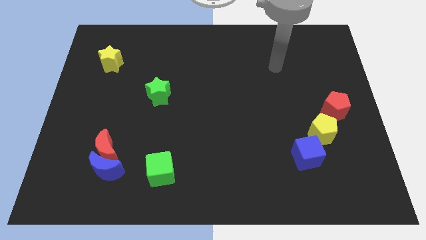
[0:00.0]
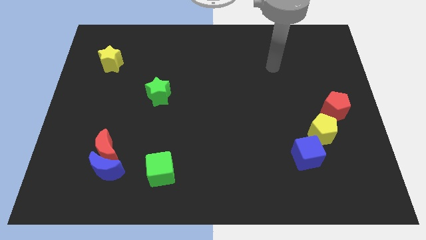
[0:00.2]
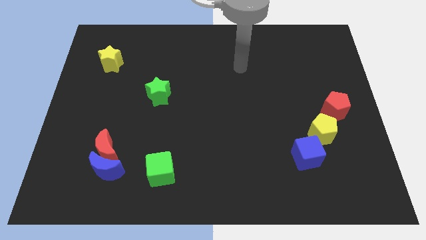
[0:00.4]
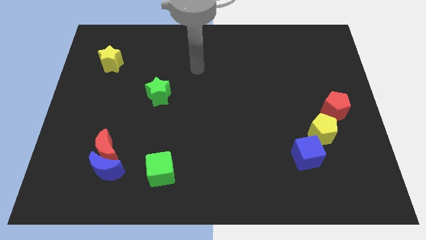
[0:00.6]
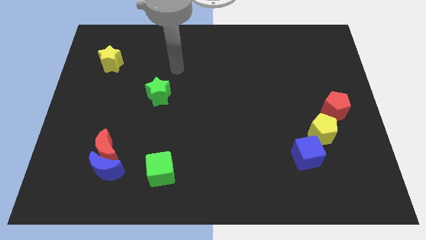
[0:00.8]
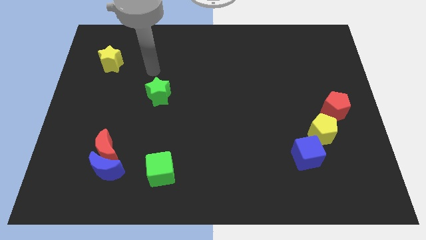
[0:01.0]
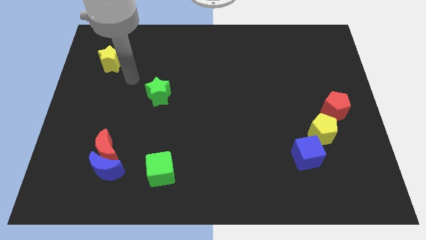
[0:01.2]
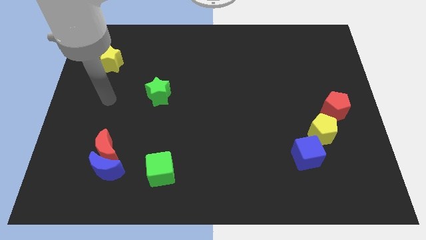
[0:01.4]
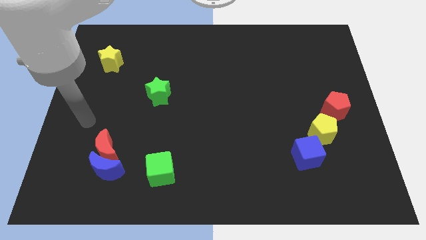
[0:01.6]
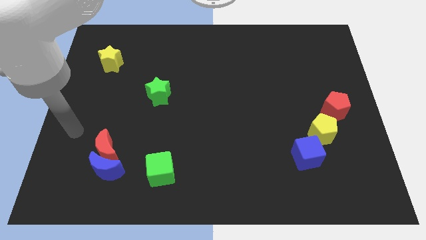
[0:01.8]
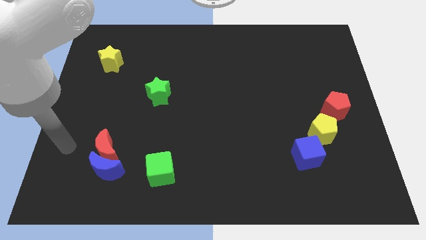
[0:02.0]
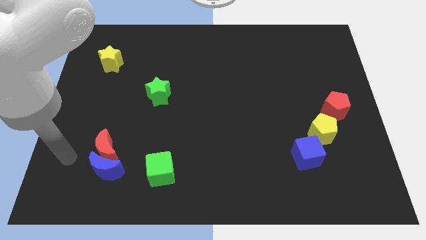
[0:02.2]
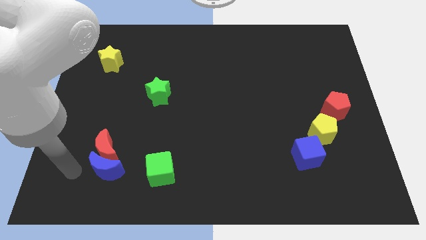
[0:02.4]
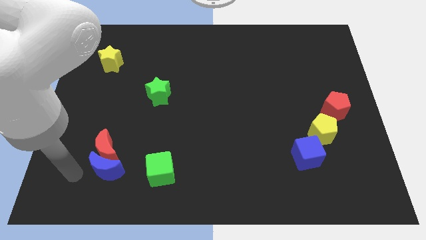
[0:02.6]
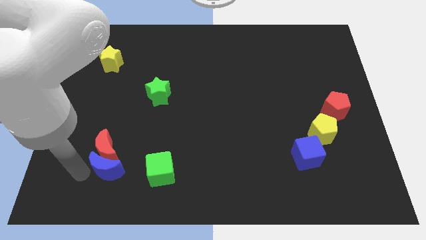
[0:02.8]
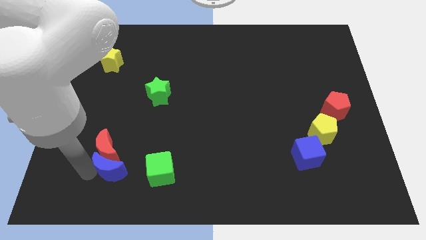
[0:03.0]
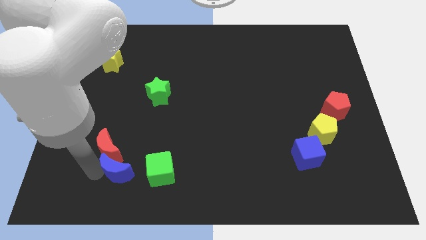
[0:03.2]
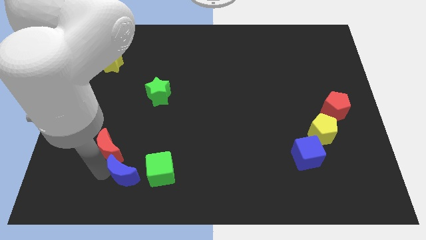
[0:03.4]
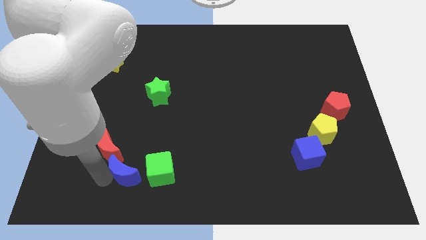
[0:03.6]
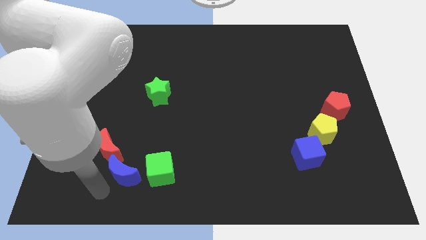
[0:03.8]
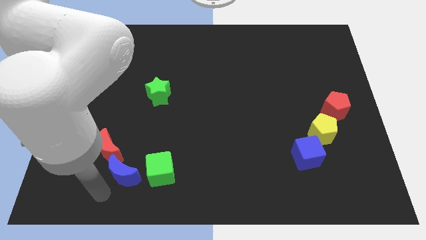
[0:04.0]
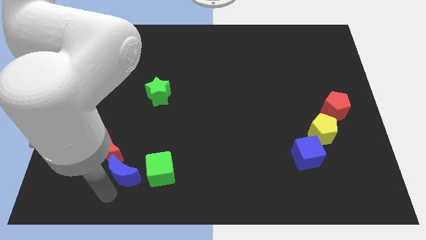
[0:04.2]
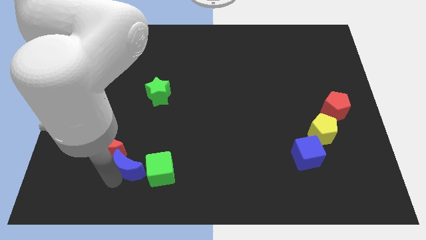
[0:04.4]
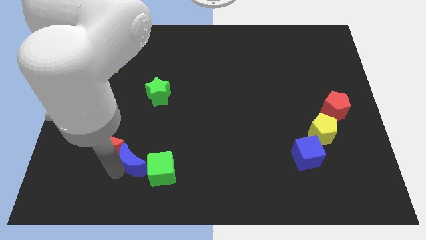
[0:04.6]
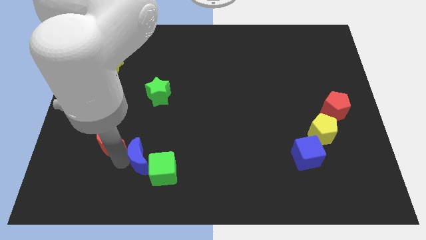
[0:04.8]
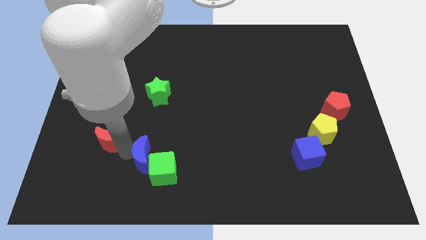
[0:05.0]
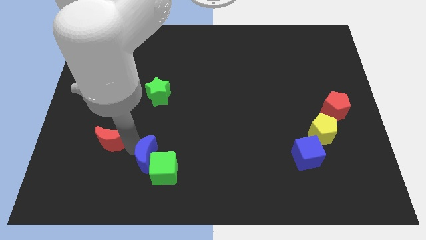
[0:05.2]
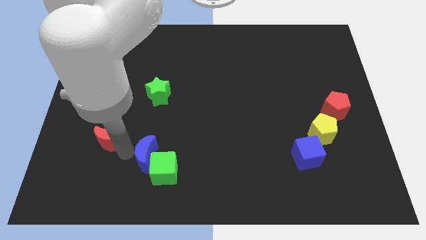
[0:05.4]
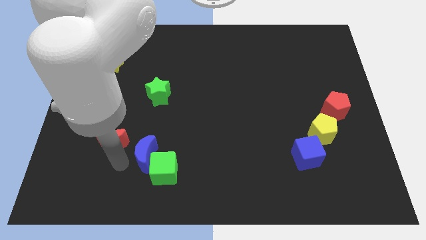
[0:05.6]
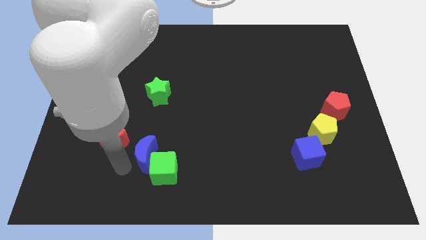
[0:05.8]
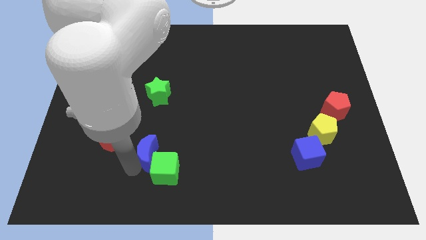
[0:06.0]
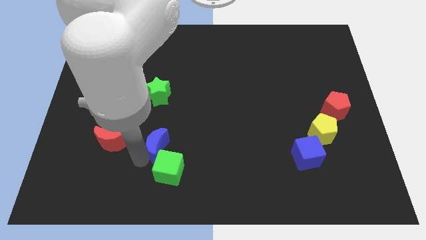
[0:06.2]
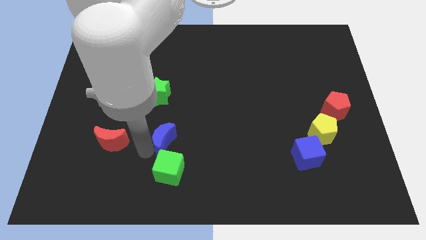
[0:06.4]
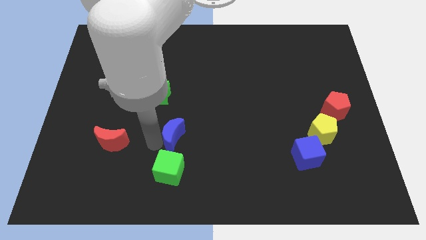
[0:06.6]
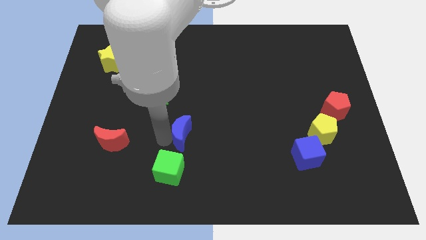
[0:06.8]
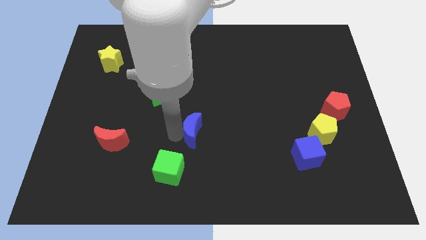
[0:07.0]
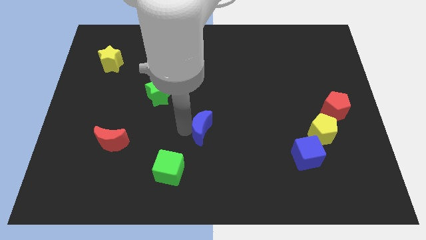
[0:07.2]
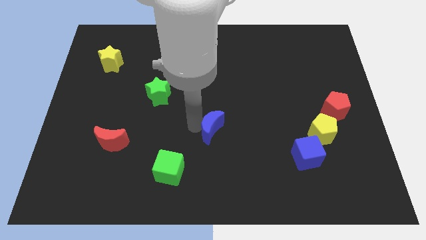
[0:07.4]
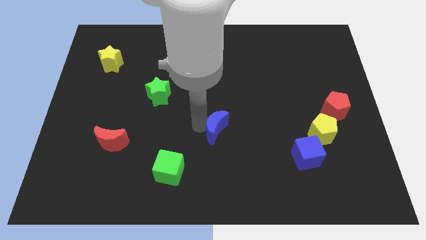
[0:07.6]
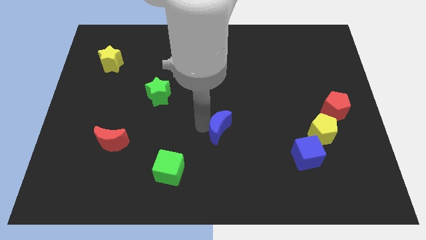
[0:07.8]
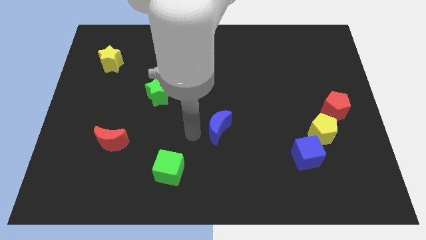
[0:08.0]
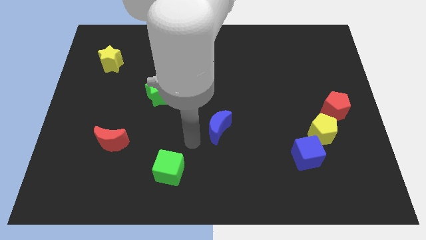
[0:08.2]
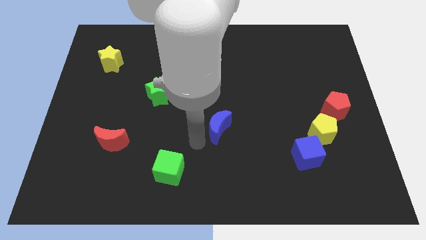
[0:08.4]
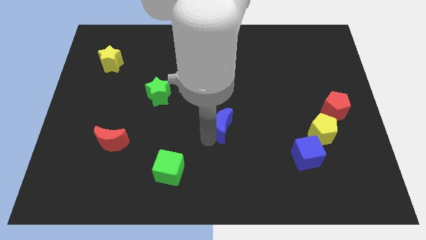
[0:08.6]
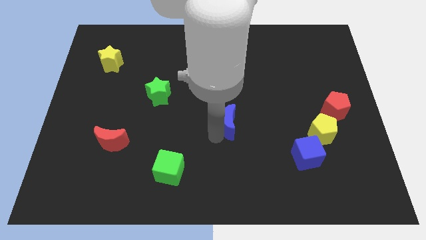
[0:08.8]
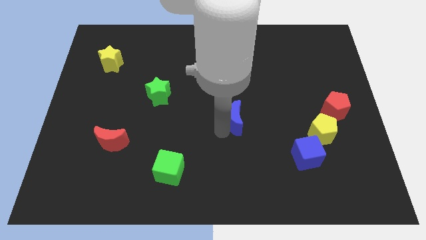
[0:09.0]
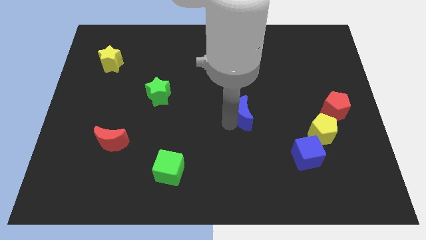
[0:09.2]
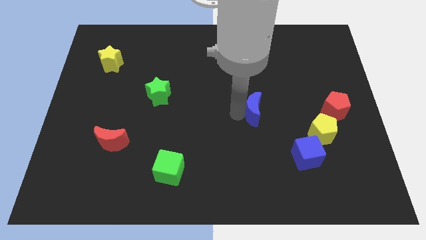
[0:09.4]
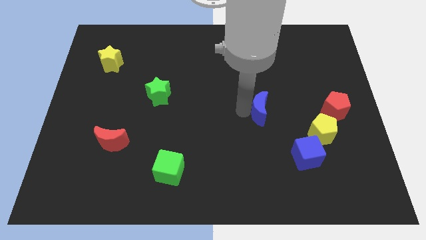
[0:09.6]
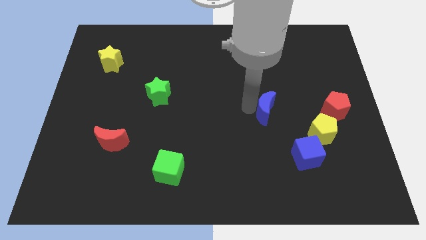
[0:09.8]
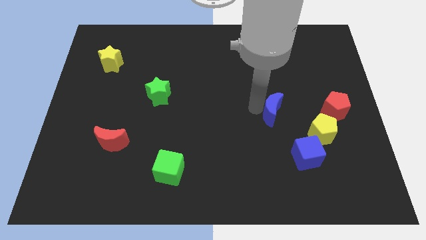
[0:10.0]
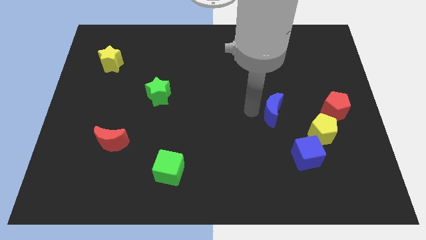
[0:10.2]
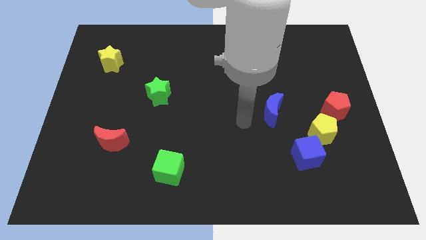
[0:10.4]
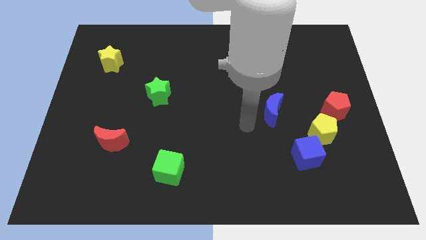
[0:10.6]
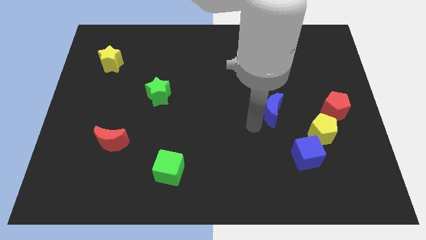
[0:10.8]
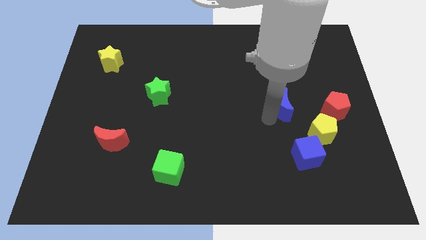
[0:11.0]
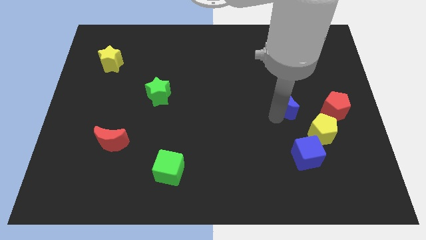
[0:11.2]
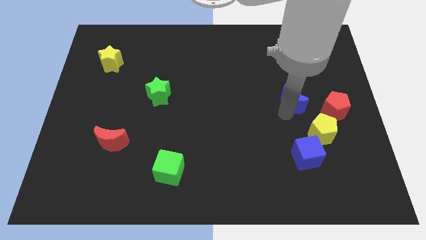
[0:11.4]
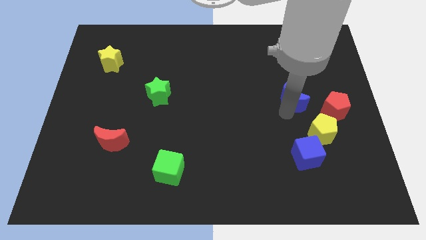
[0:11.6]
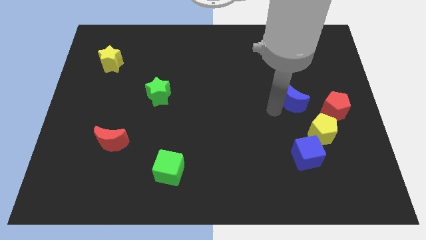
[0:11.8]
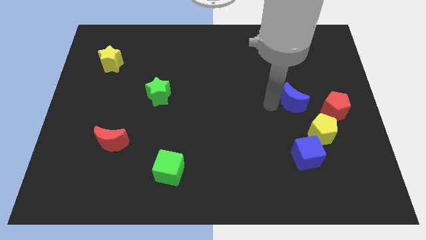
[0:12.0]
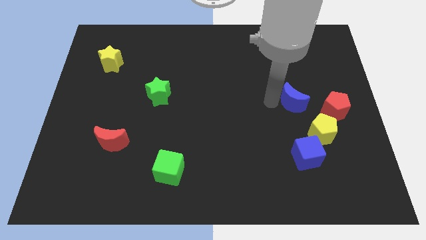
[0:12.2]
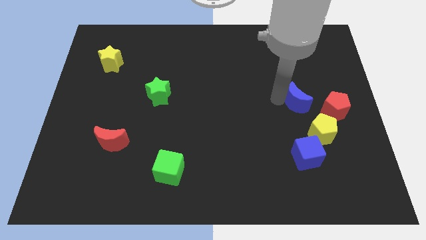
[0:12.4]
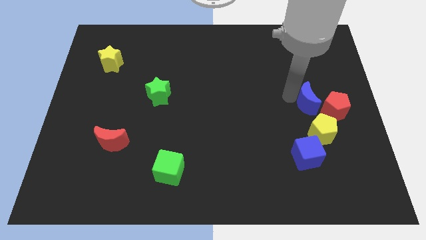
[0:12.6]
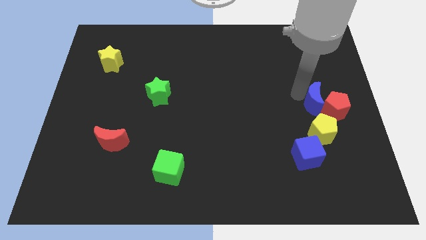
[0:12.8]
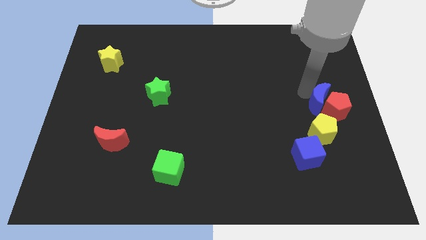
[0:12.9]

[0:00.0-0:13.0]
slide the blue moon to the red pentagon

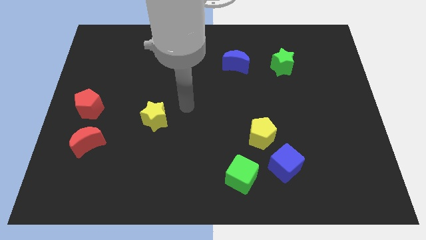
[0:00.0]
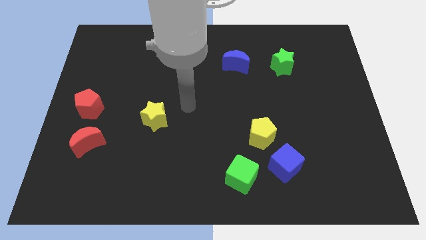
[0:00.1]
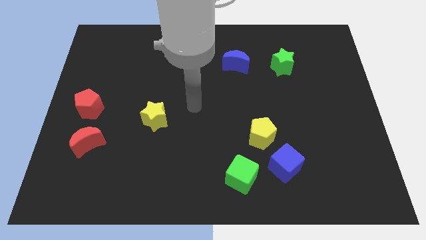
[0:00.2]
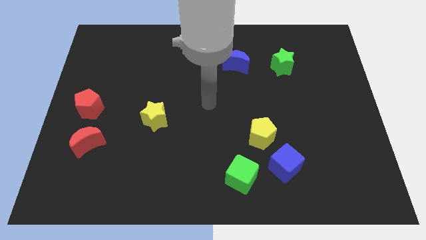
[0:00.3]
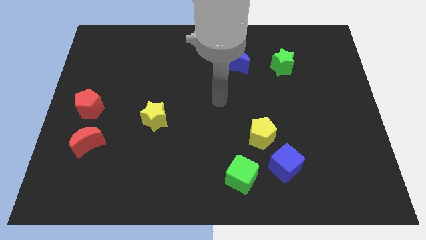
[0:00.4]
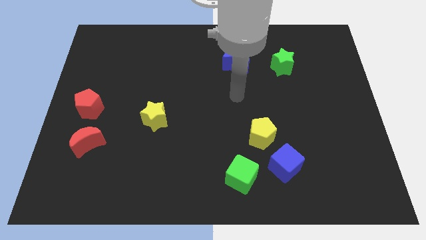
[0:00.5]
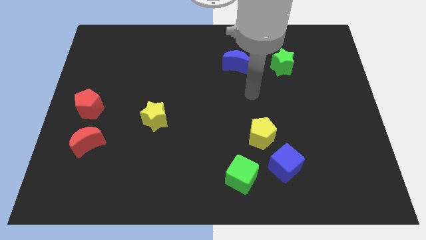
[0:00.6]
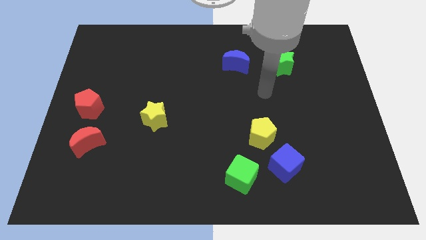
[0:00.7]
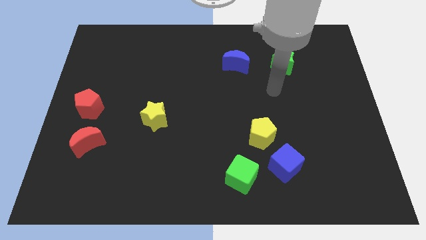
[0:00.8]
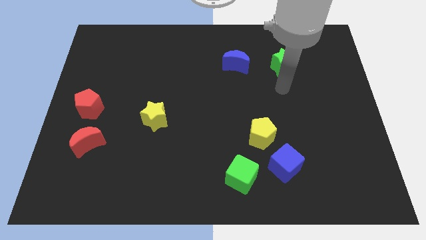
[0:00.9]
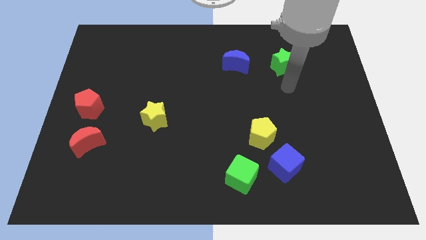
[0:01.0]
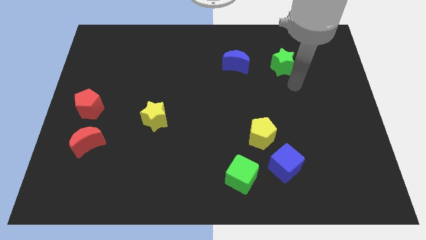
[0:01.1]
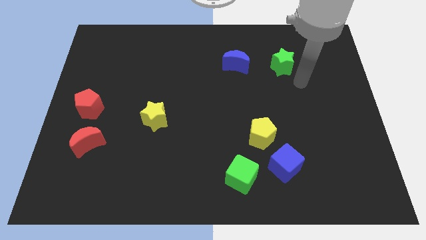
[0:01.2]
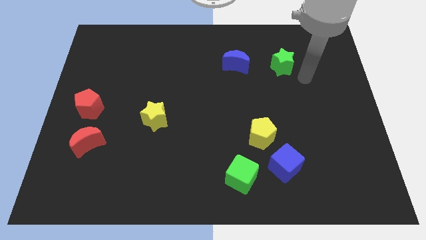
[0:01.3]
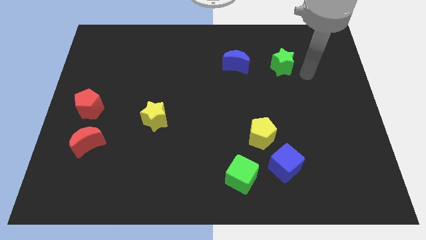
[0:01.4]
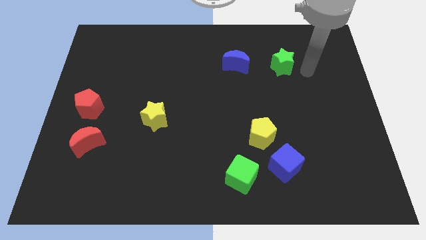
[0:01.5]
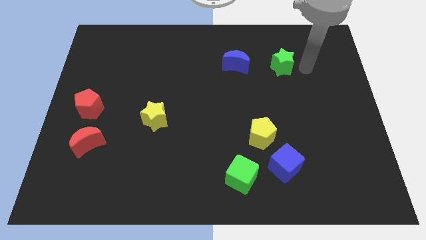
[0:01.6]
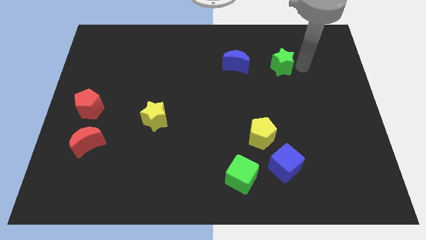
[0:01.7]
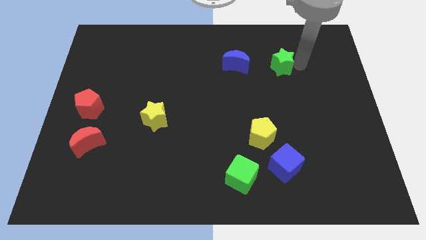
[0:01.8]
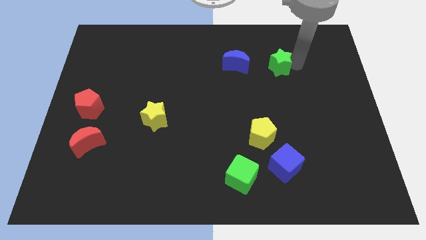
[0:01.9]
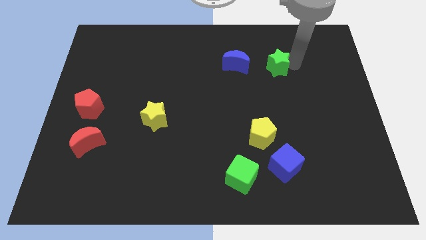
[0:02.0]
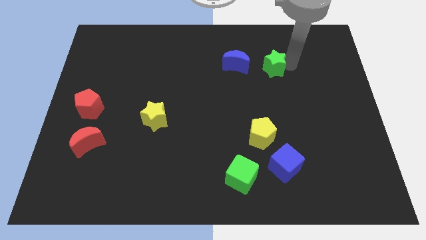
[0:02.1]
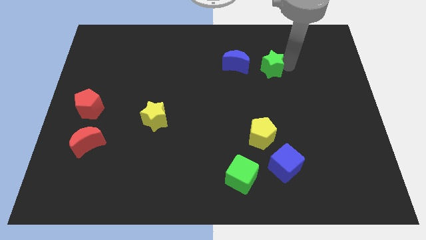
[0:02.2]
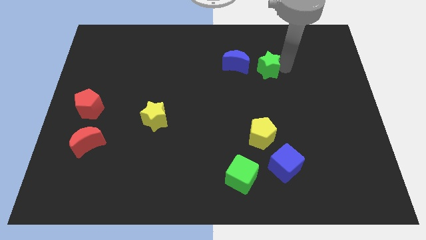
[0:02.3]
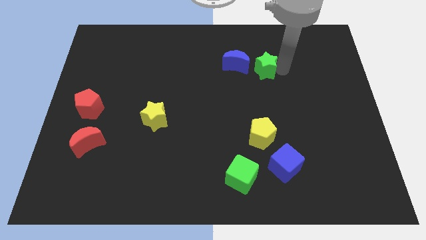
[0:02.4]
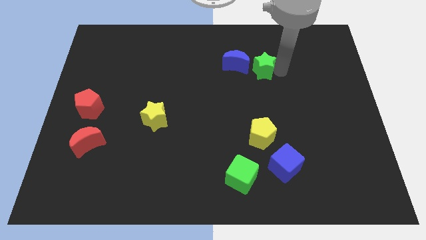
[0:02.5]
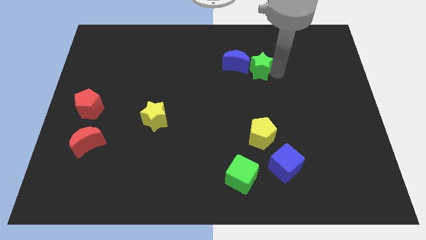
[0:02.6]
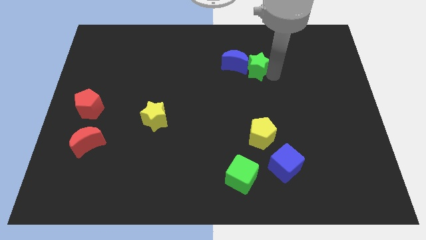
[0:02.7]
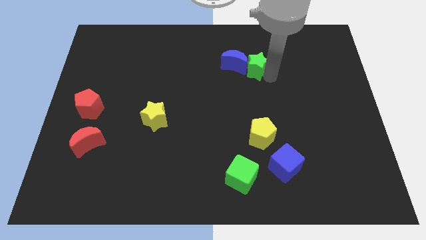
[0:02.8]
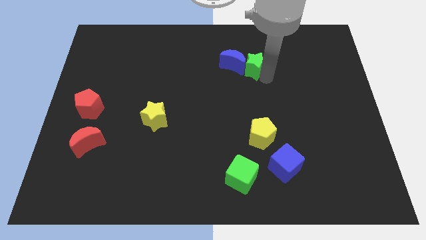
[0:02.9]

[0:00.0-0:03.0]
move the green star close to the blue moon
